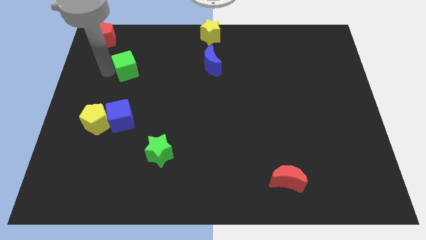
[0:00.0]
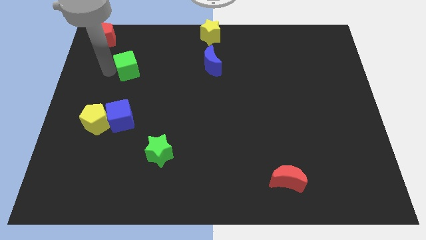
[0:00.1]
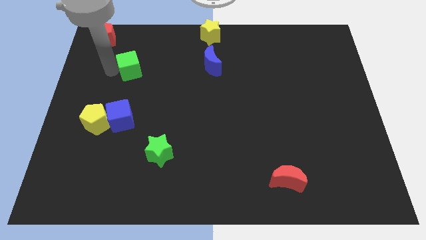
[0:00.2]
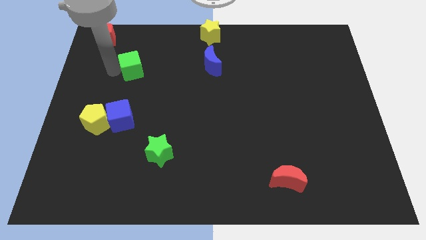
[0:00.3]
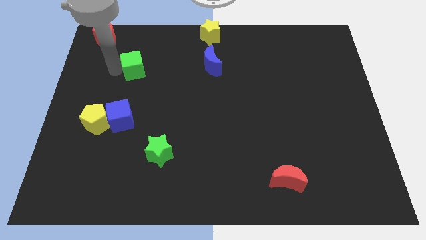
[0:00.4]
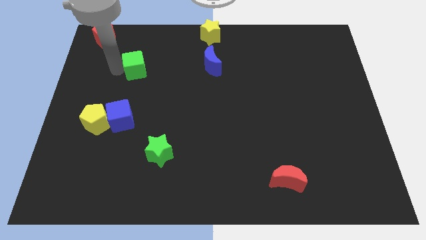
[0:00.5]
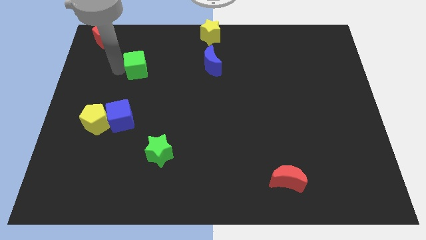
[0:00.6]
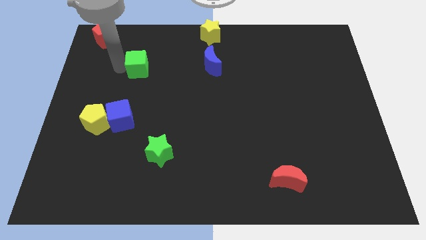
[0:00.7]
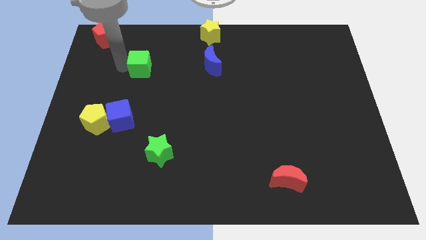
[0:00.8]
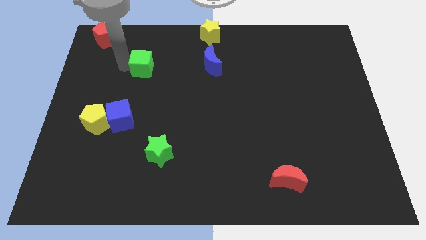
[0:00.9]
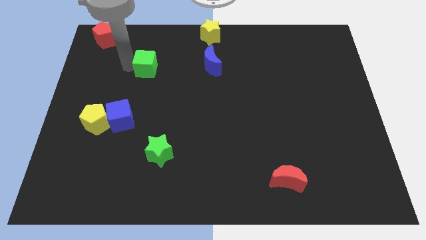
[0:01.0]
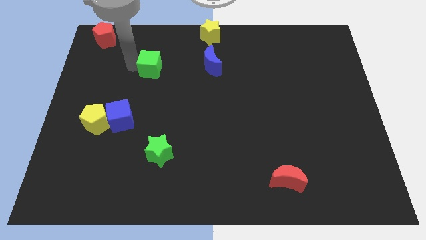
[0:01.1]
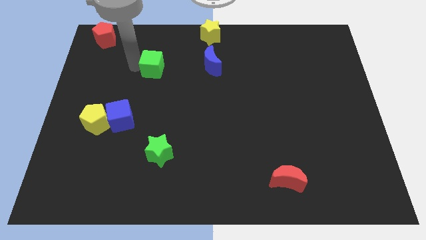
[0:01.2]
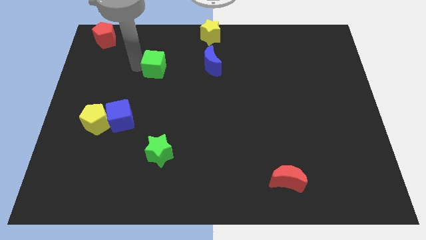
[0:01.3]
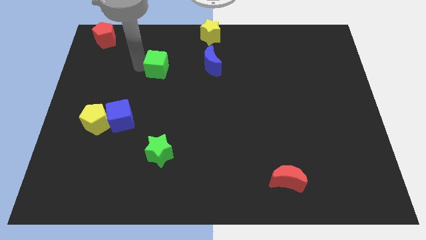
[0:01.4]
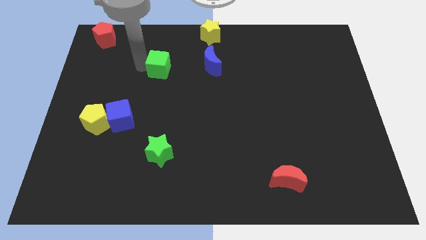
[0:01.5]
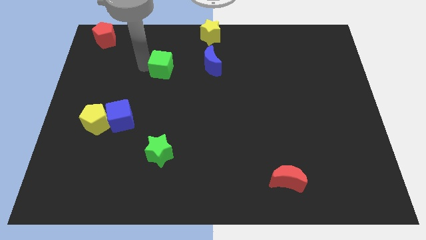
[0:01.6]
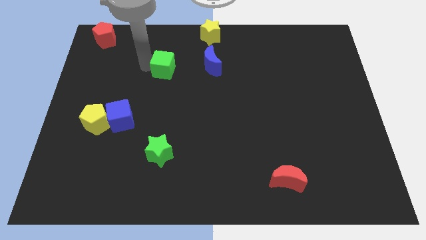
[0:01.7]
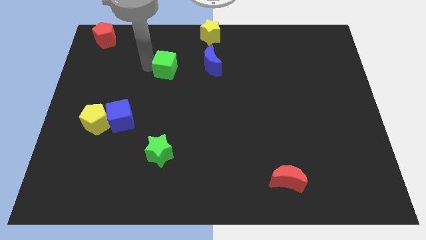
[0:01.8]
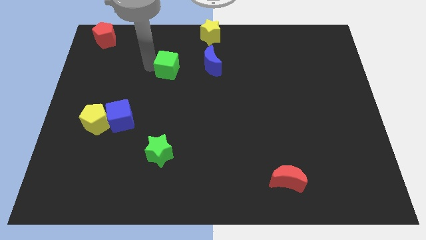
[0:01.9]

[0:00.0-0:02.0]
place the green cube vertically above the green star

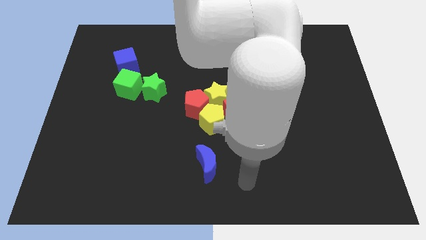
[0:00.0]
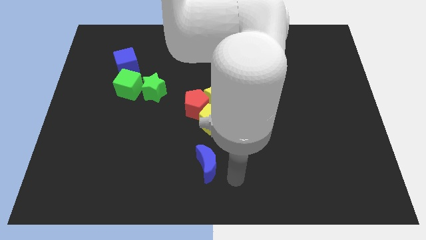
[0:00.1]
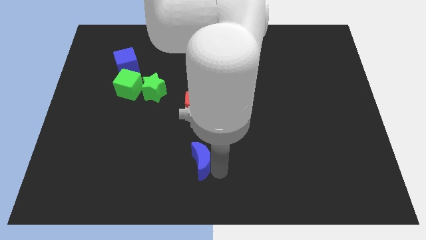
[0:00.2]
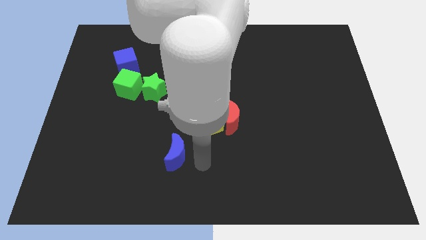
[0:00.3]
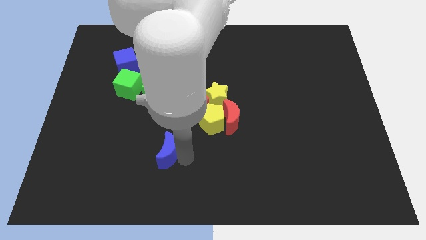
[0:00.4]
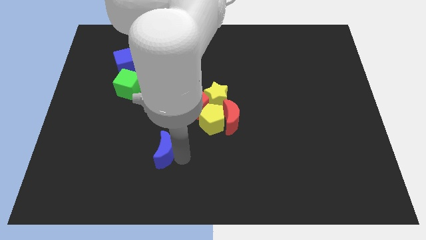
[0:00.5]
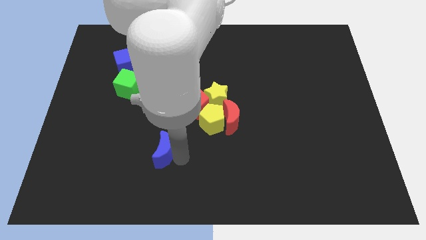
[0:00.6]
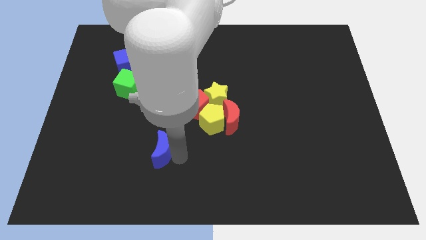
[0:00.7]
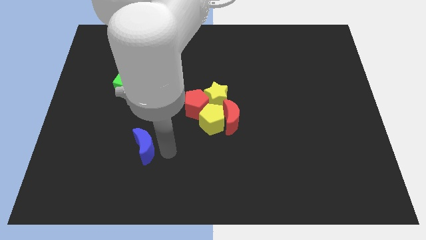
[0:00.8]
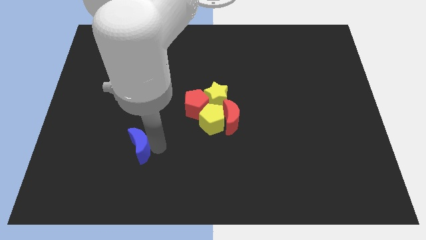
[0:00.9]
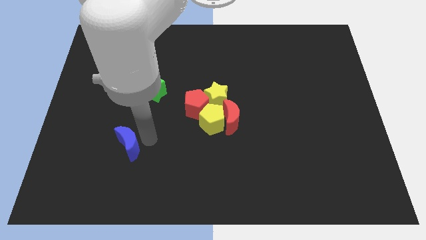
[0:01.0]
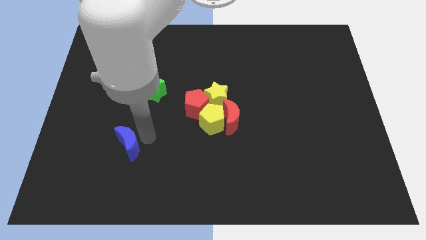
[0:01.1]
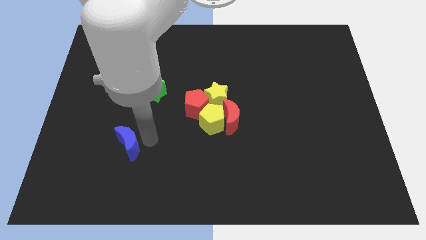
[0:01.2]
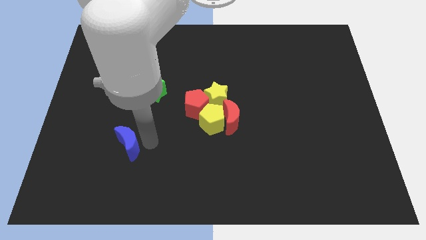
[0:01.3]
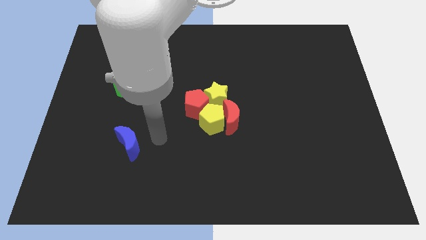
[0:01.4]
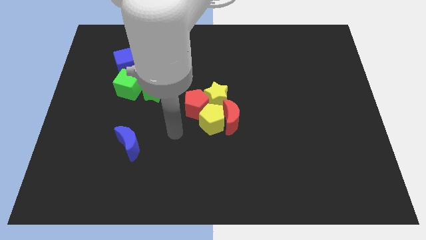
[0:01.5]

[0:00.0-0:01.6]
move the blue moon vertically below the green cube

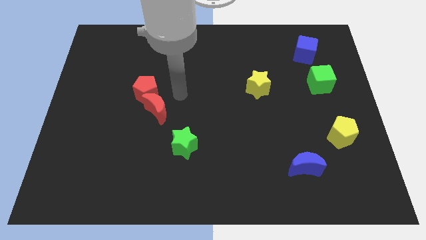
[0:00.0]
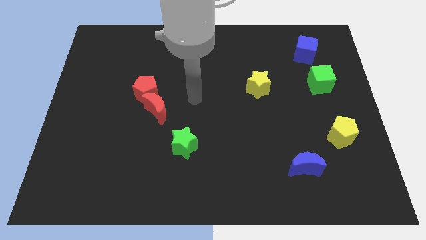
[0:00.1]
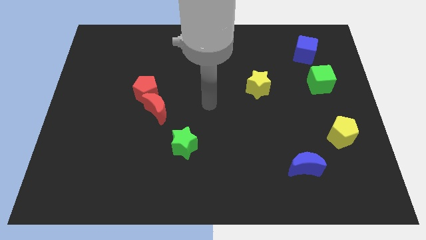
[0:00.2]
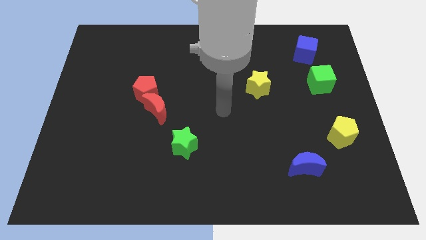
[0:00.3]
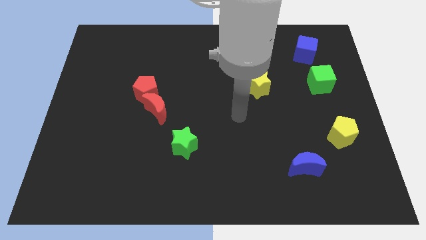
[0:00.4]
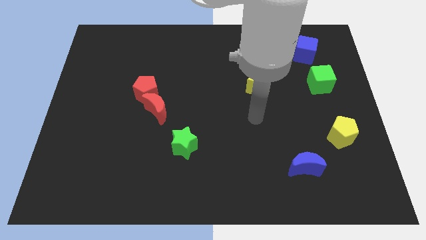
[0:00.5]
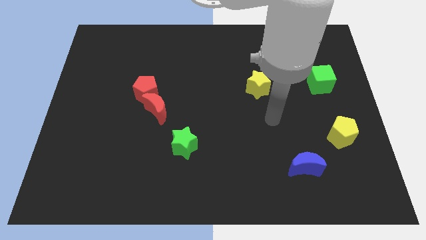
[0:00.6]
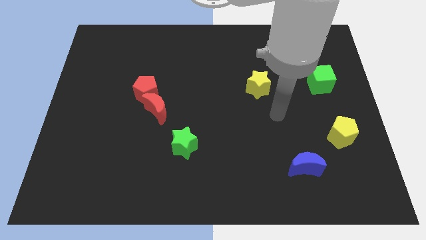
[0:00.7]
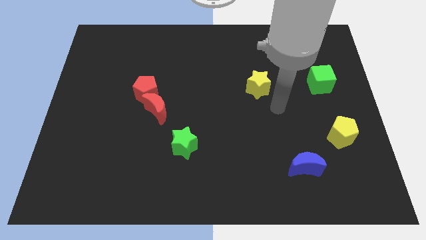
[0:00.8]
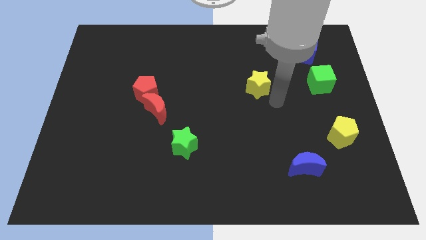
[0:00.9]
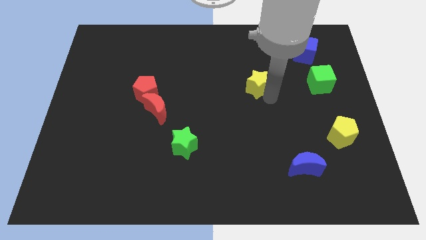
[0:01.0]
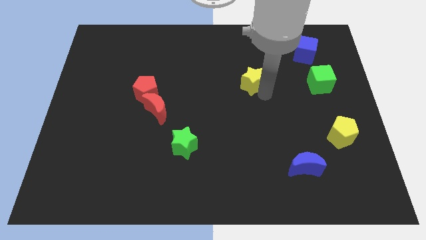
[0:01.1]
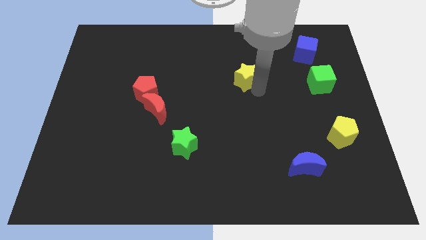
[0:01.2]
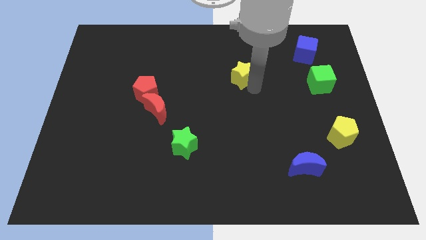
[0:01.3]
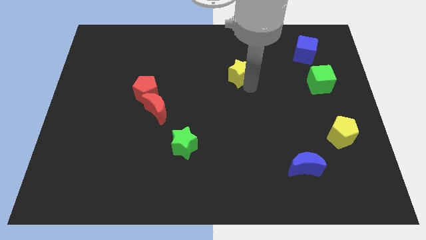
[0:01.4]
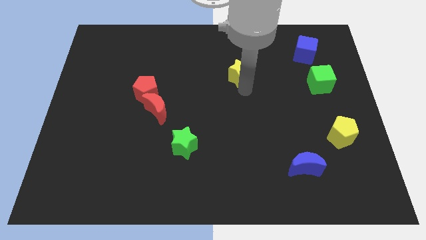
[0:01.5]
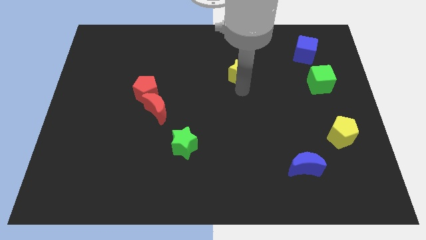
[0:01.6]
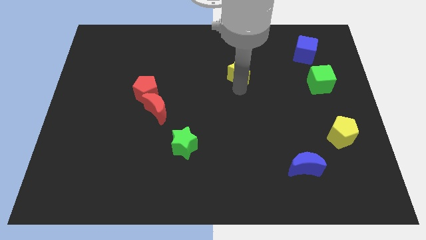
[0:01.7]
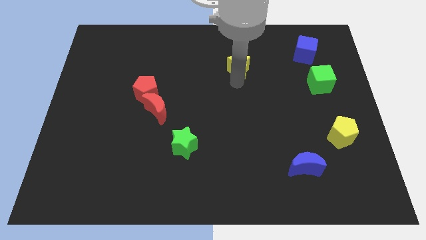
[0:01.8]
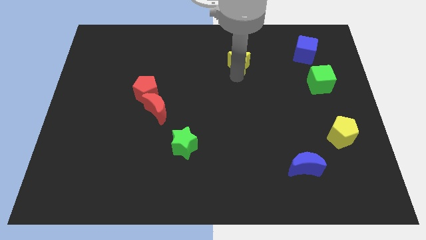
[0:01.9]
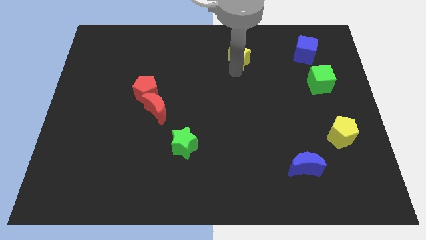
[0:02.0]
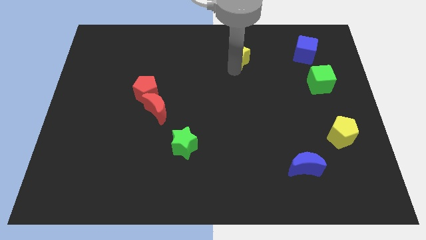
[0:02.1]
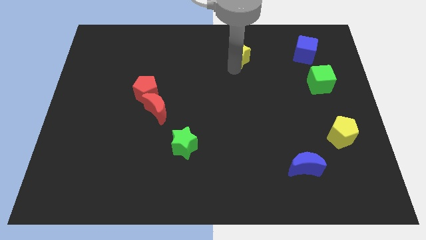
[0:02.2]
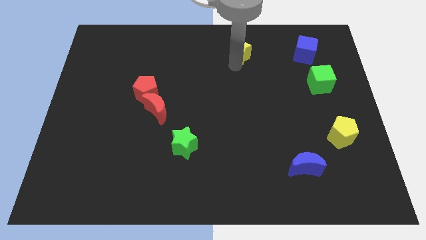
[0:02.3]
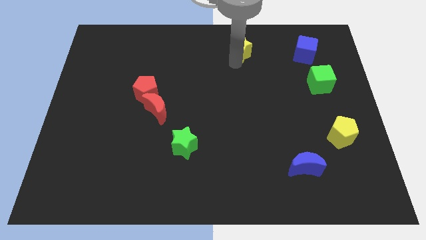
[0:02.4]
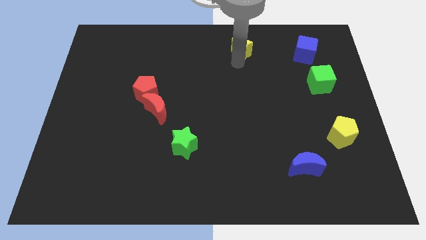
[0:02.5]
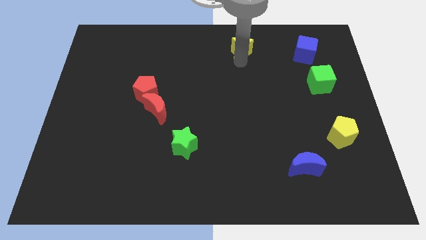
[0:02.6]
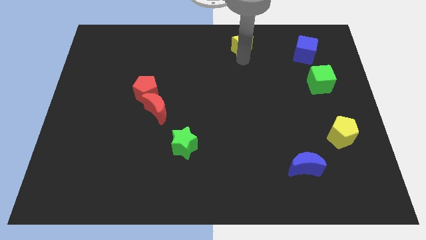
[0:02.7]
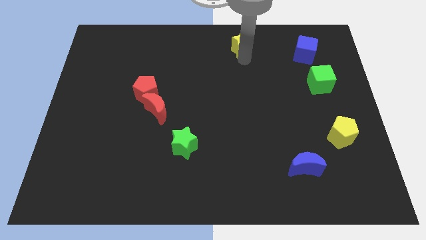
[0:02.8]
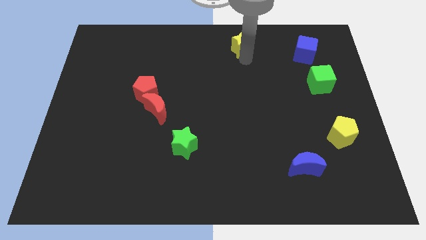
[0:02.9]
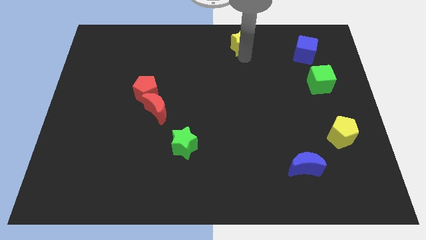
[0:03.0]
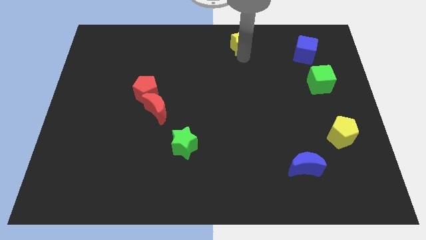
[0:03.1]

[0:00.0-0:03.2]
put the yellow star parallel left to the blue cube

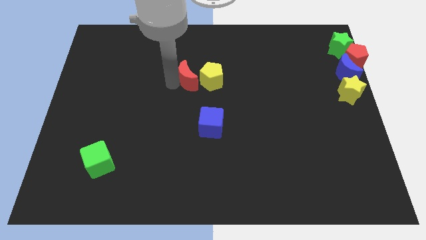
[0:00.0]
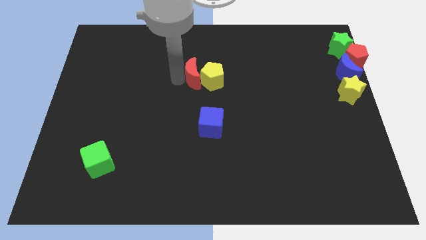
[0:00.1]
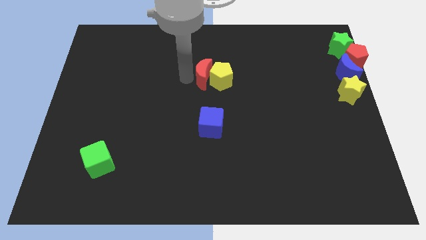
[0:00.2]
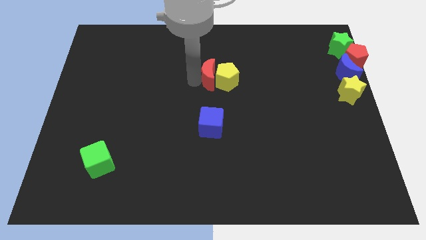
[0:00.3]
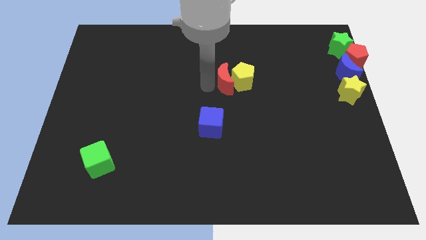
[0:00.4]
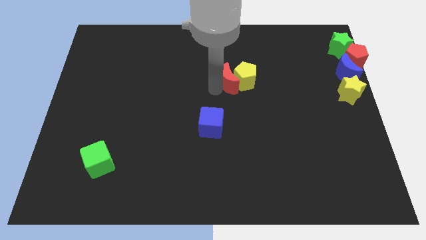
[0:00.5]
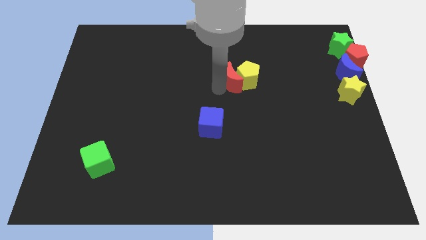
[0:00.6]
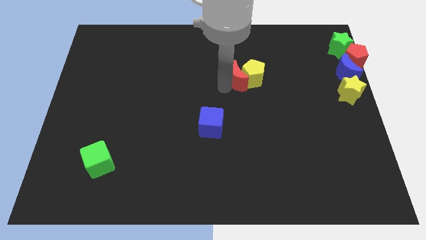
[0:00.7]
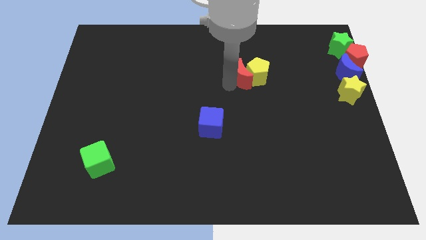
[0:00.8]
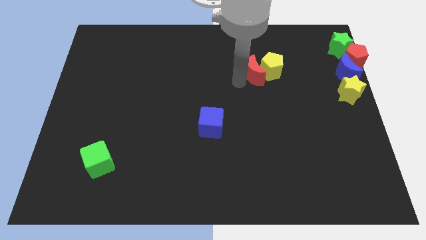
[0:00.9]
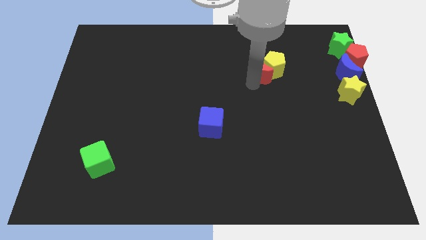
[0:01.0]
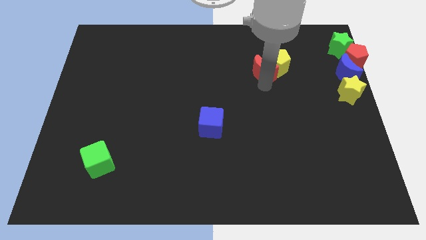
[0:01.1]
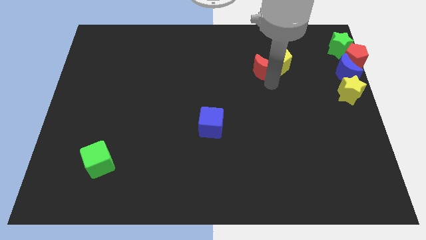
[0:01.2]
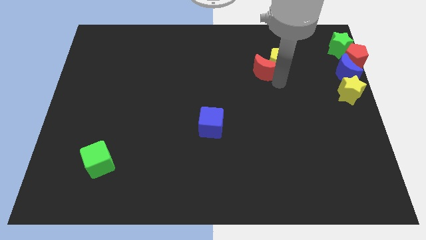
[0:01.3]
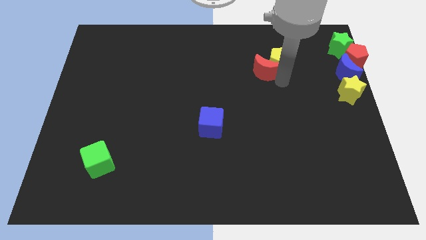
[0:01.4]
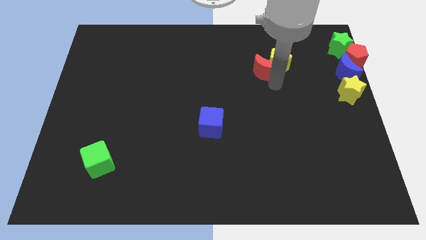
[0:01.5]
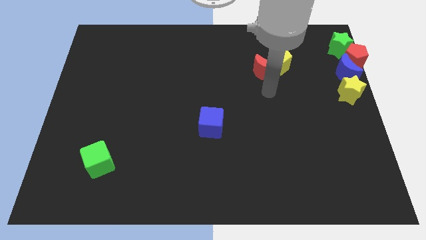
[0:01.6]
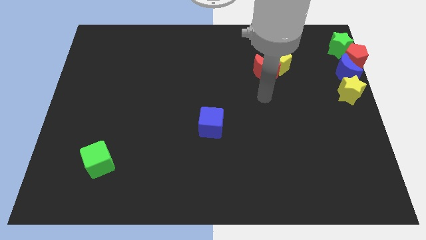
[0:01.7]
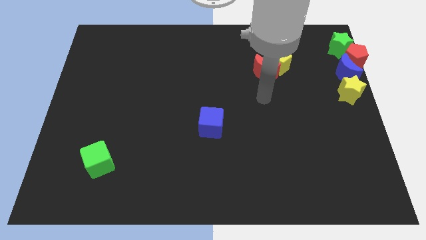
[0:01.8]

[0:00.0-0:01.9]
move the red moon and yellow pentagon towards the top center

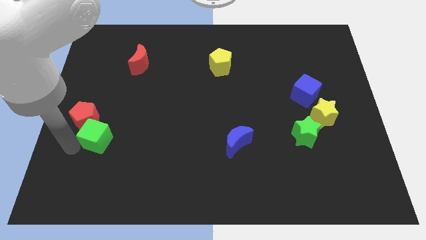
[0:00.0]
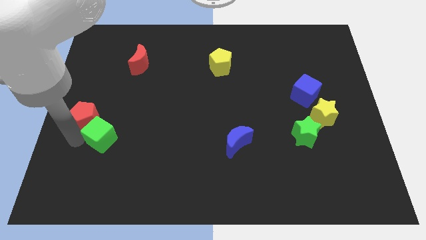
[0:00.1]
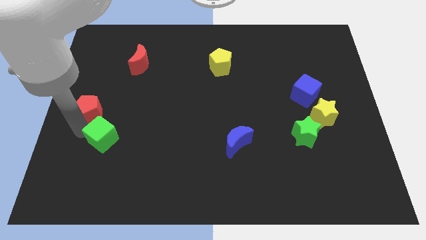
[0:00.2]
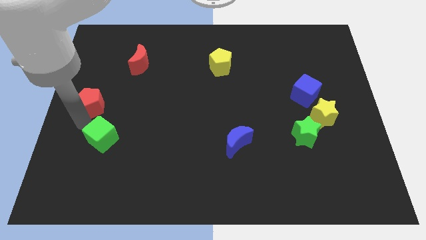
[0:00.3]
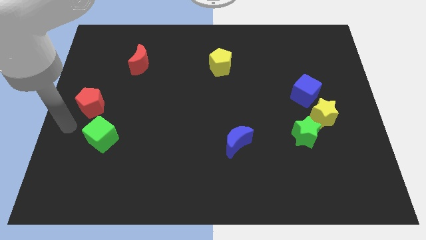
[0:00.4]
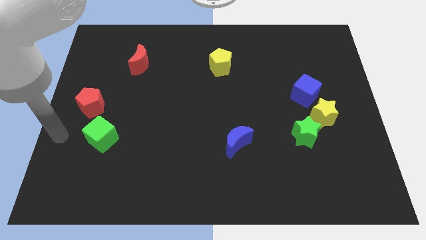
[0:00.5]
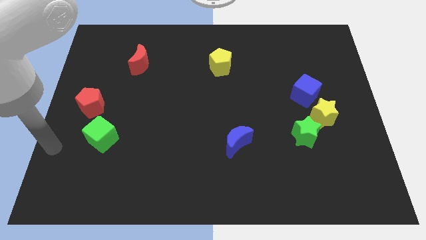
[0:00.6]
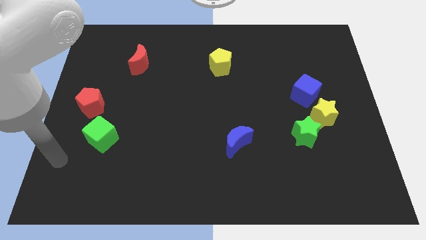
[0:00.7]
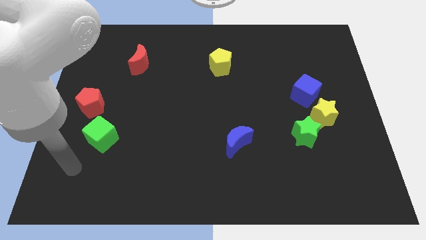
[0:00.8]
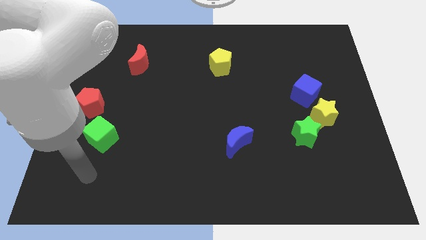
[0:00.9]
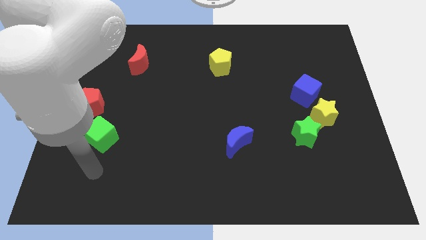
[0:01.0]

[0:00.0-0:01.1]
separate the green cube with red pentagon
